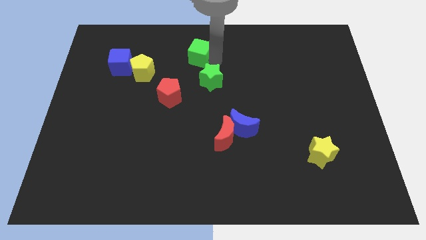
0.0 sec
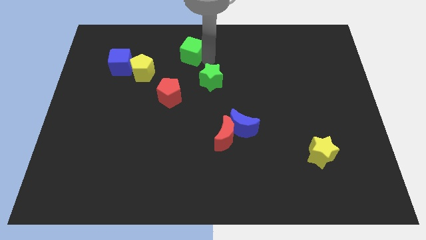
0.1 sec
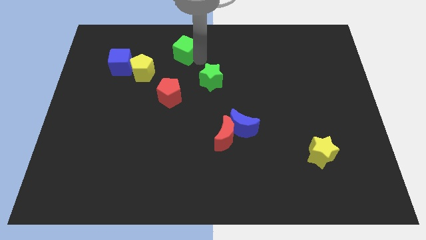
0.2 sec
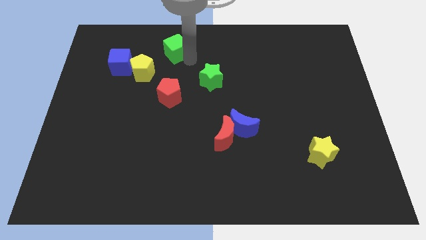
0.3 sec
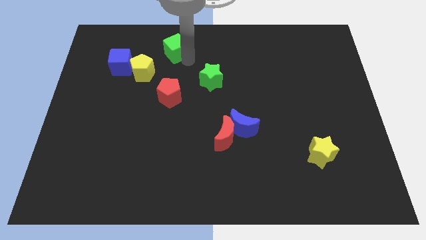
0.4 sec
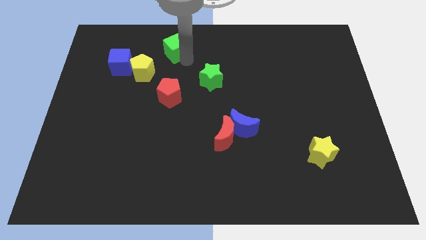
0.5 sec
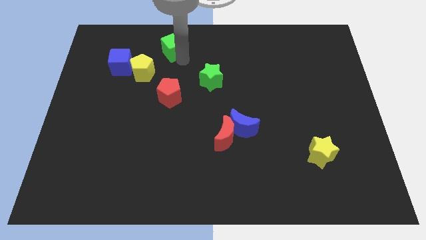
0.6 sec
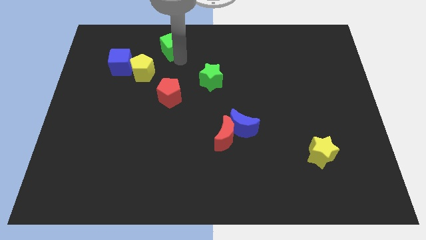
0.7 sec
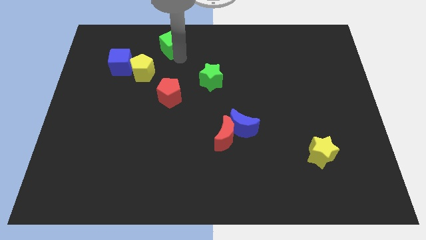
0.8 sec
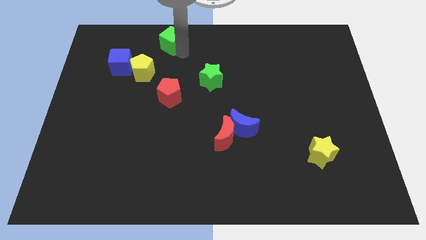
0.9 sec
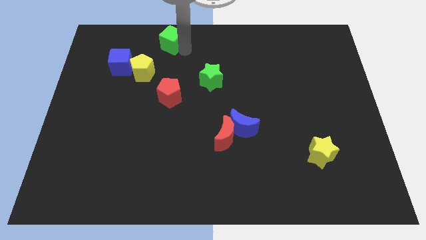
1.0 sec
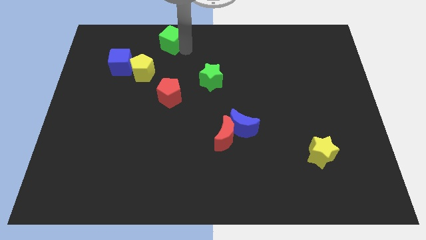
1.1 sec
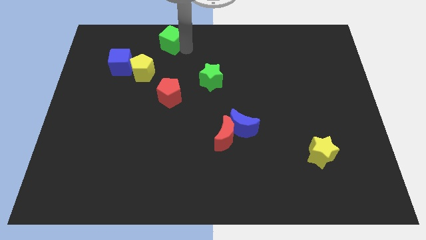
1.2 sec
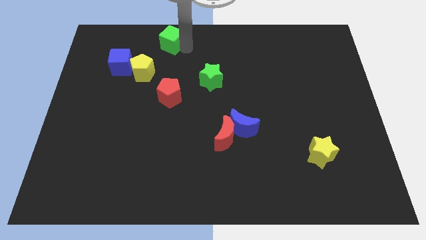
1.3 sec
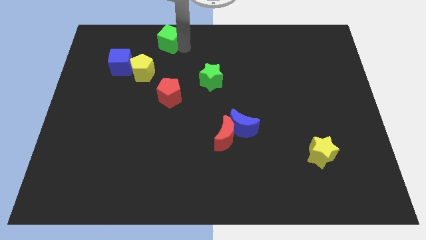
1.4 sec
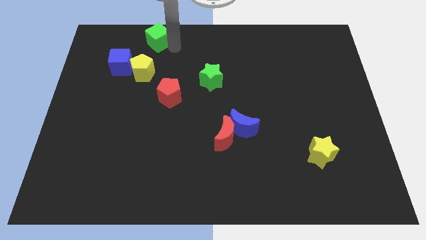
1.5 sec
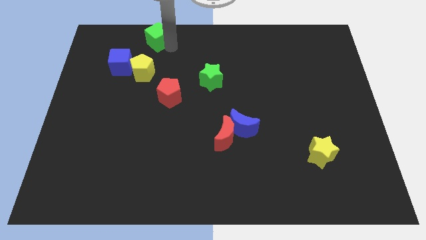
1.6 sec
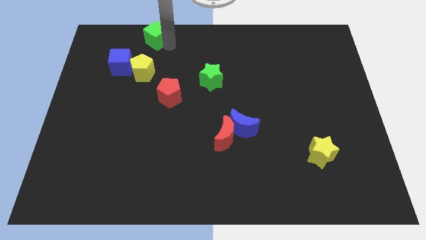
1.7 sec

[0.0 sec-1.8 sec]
move the green cube to the center top

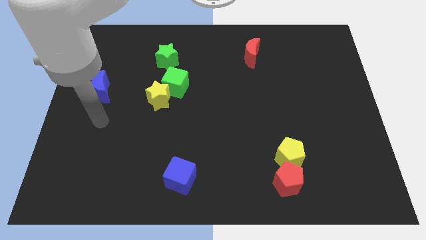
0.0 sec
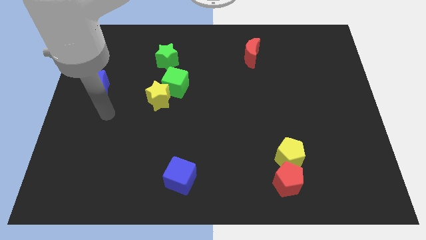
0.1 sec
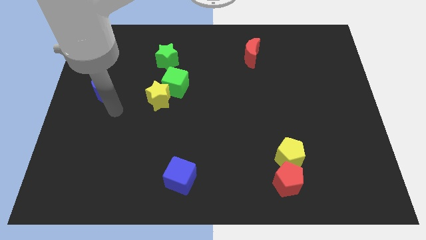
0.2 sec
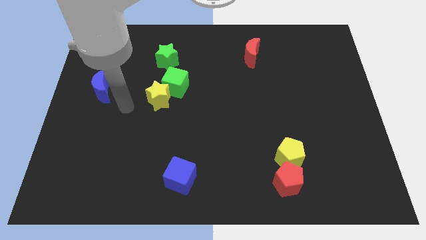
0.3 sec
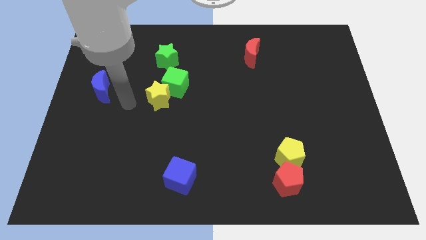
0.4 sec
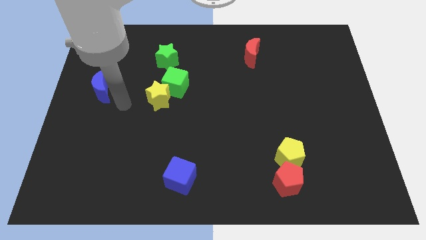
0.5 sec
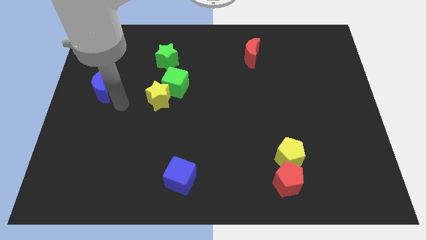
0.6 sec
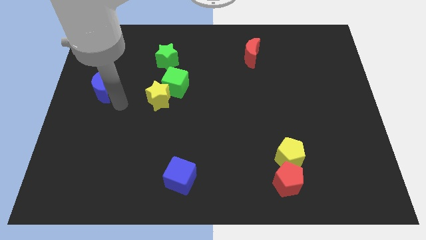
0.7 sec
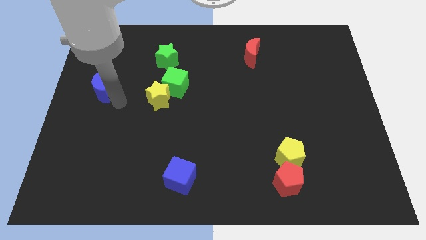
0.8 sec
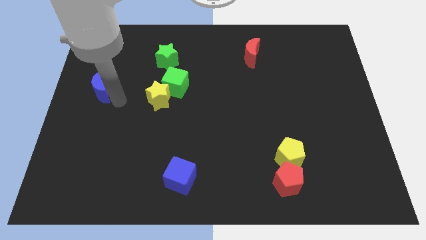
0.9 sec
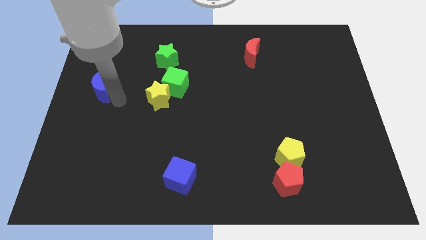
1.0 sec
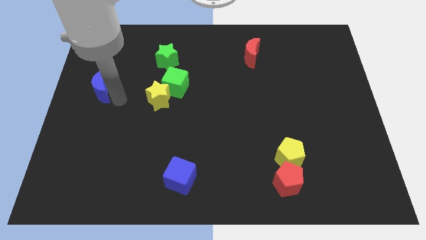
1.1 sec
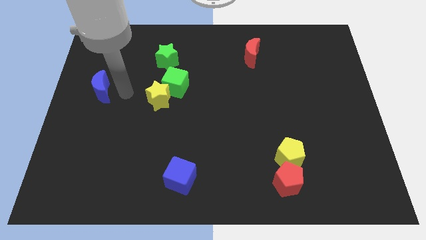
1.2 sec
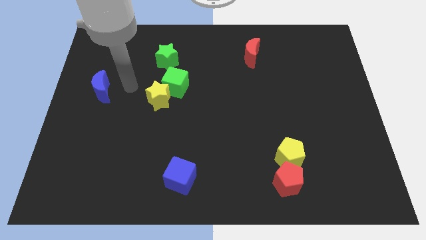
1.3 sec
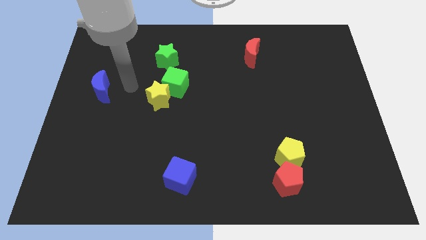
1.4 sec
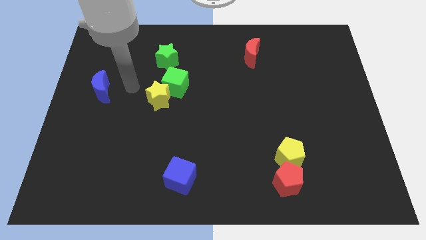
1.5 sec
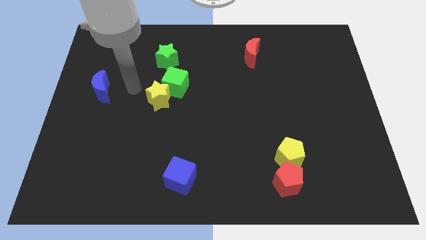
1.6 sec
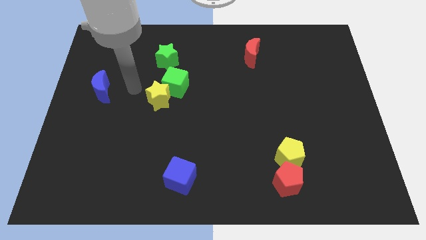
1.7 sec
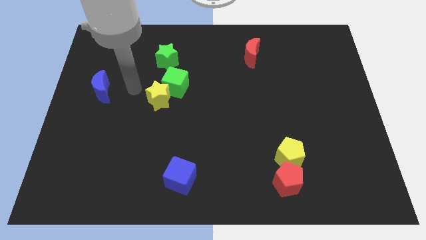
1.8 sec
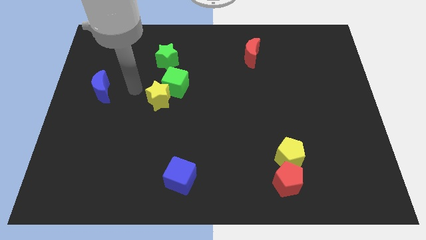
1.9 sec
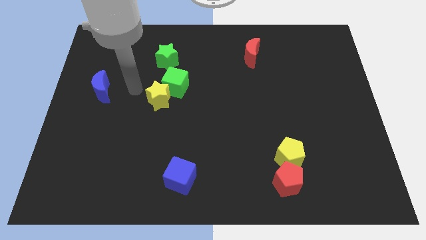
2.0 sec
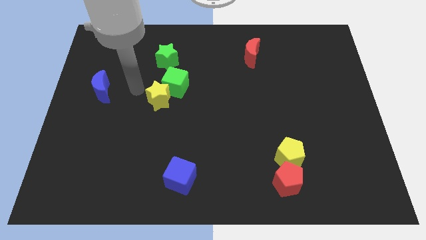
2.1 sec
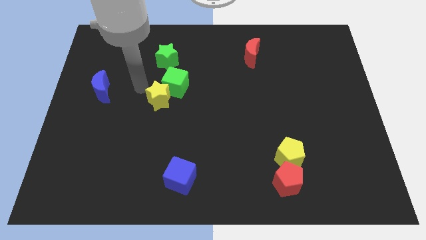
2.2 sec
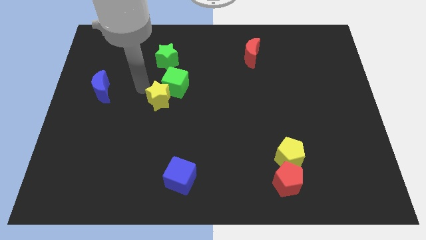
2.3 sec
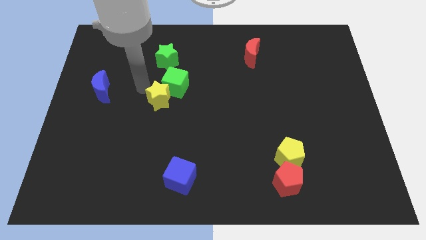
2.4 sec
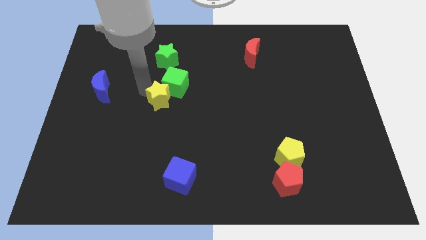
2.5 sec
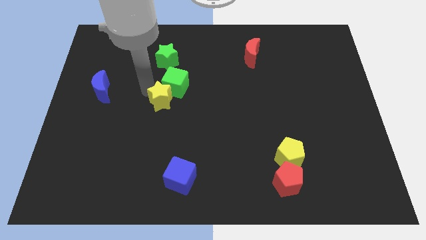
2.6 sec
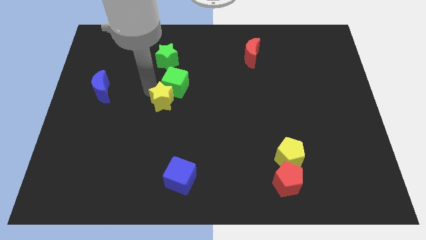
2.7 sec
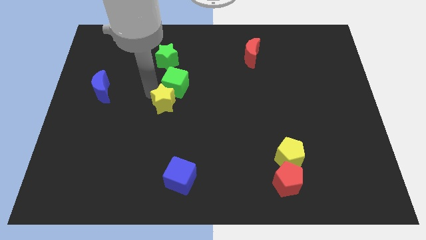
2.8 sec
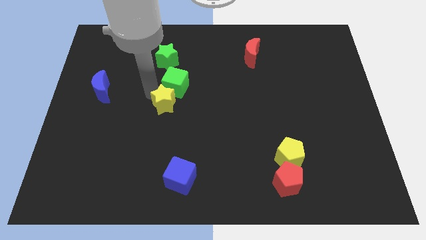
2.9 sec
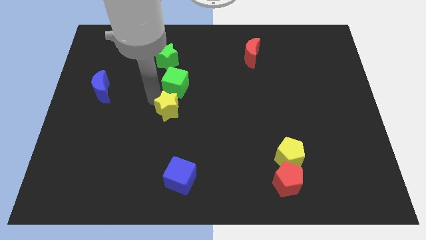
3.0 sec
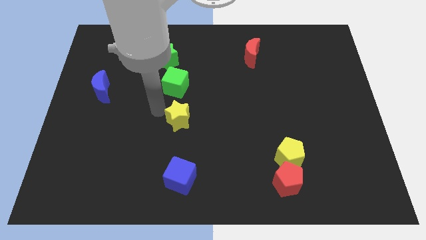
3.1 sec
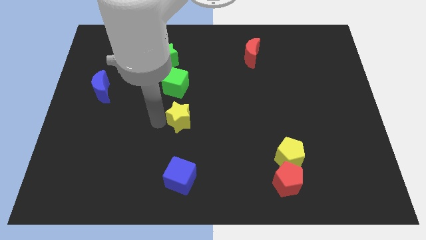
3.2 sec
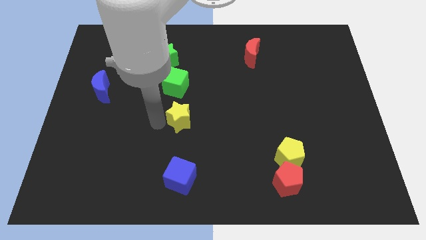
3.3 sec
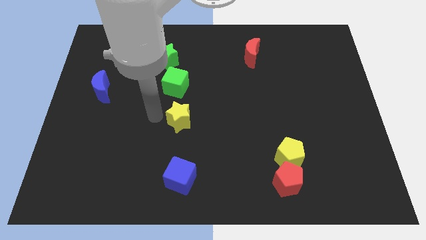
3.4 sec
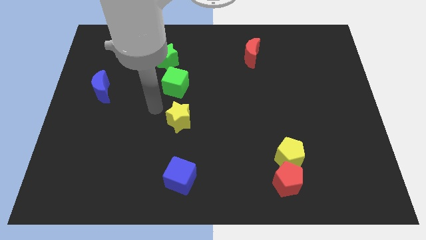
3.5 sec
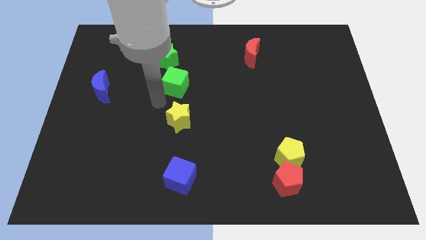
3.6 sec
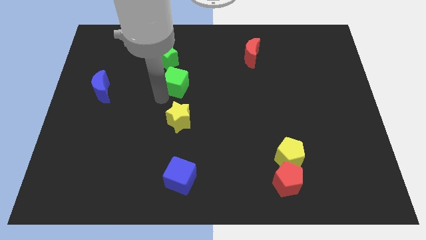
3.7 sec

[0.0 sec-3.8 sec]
place the yellow star above the blue cube

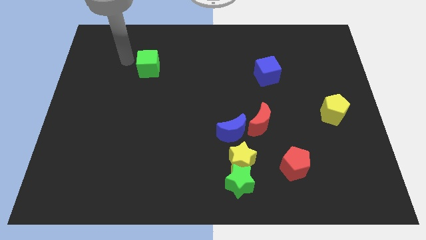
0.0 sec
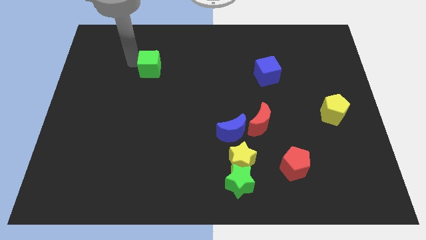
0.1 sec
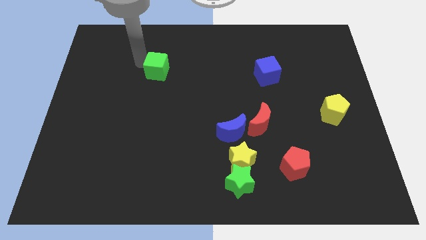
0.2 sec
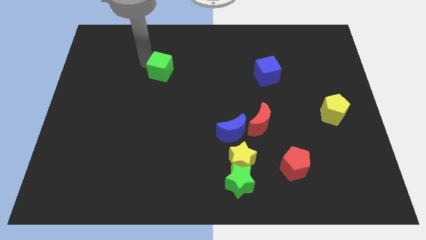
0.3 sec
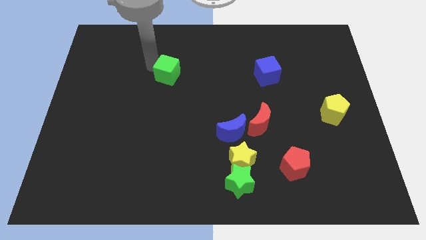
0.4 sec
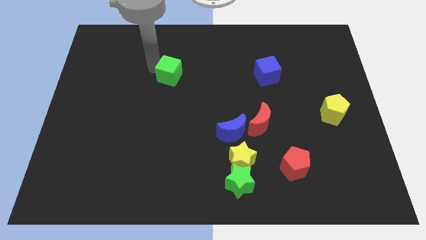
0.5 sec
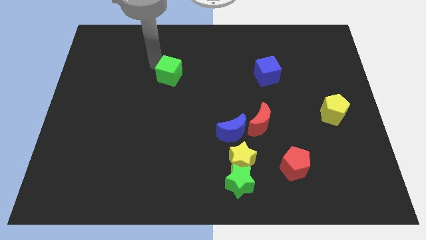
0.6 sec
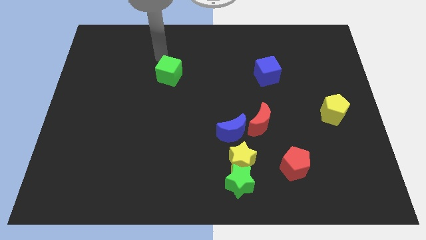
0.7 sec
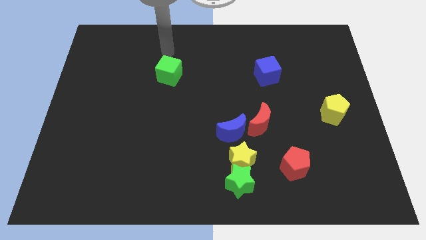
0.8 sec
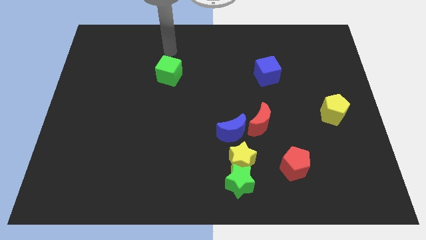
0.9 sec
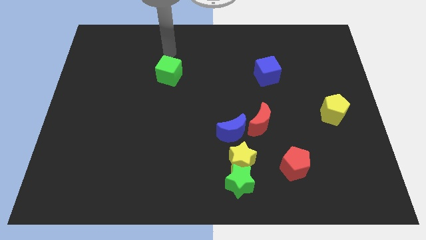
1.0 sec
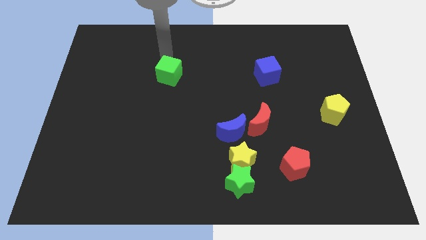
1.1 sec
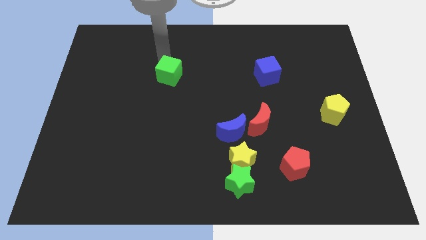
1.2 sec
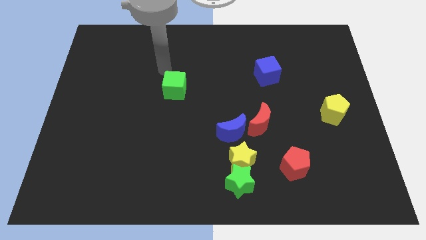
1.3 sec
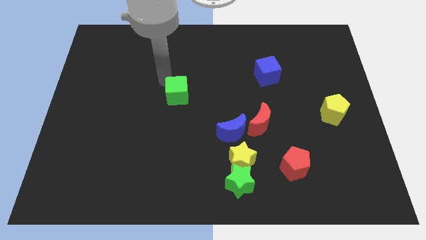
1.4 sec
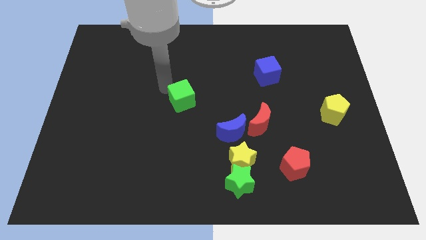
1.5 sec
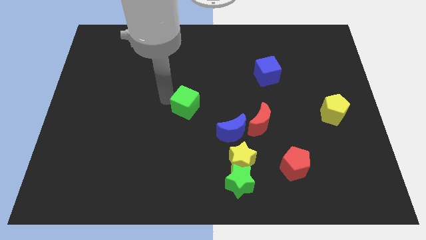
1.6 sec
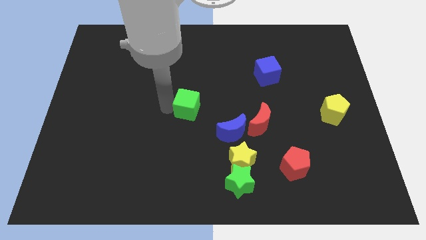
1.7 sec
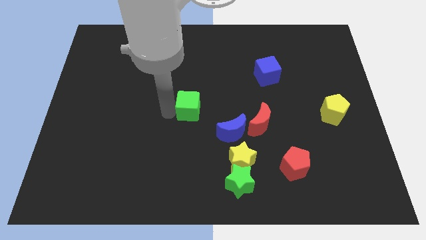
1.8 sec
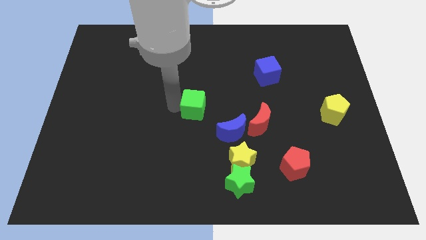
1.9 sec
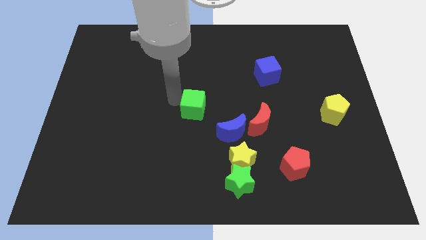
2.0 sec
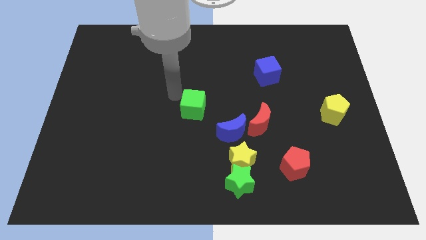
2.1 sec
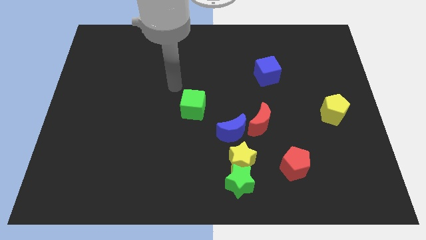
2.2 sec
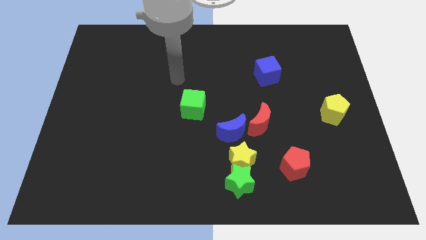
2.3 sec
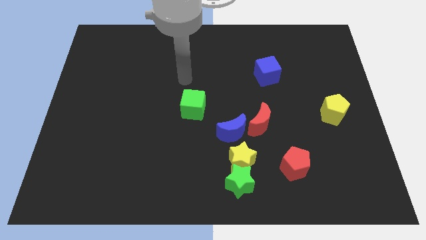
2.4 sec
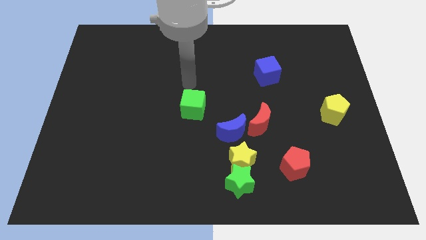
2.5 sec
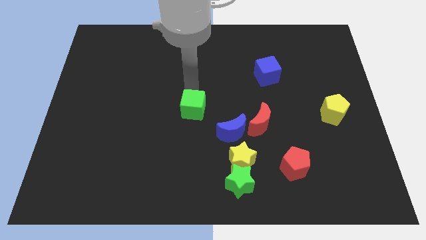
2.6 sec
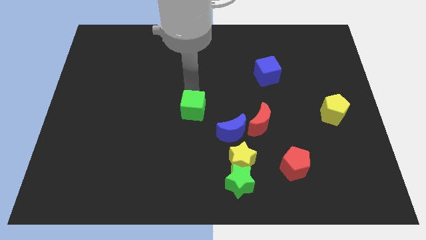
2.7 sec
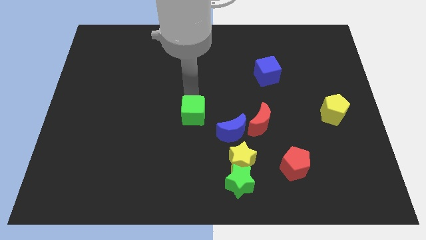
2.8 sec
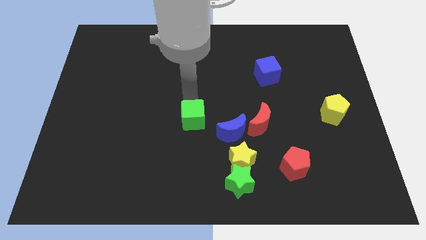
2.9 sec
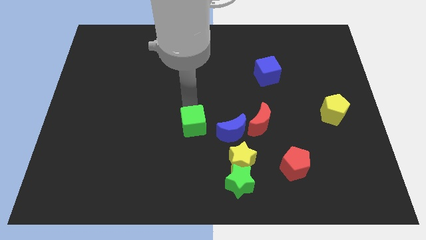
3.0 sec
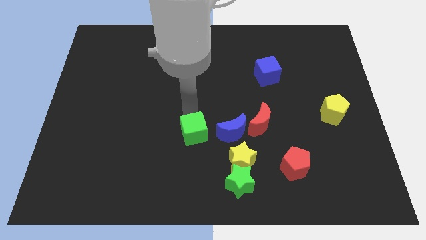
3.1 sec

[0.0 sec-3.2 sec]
place green cube parallel to blue moon
